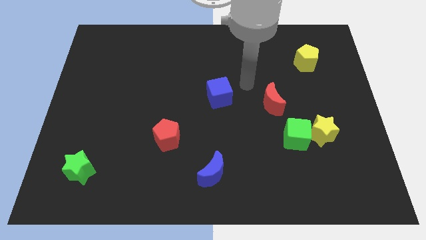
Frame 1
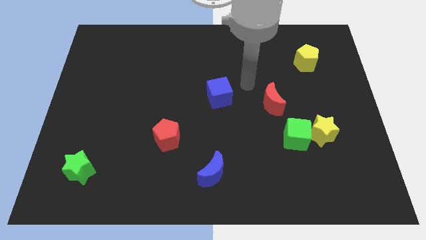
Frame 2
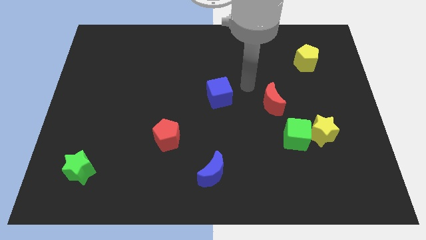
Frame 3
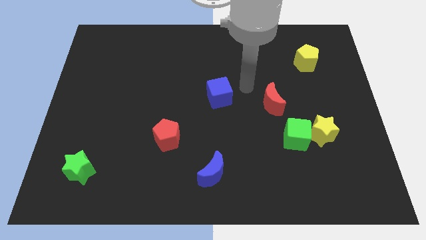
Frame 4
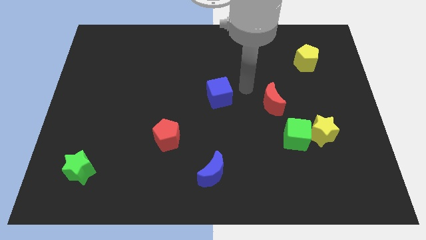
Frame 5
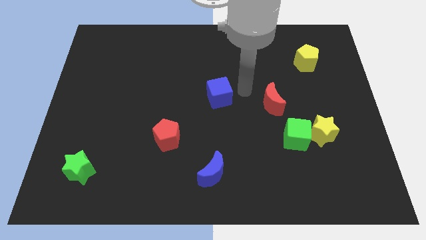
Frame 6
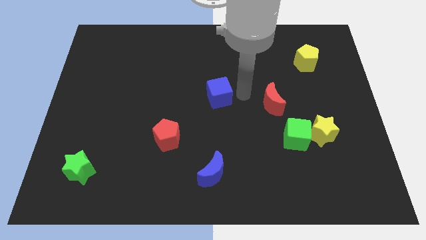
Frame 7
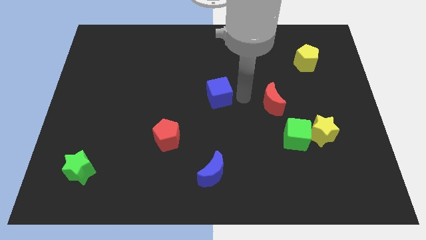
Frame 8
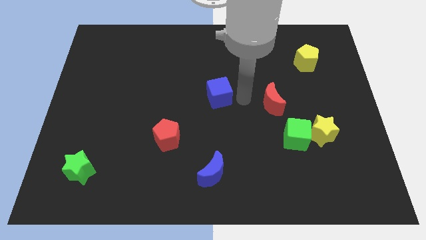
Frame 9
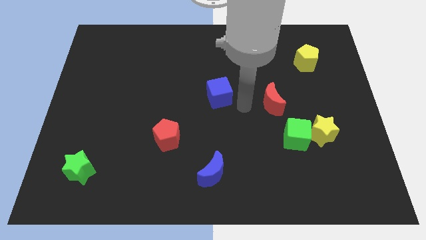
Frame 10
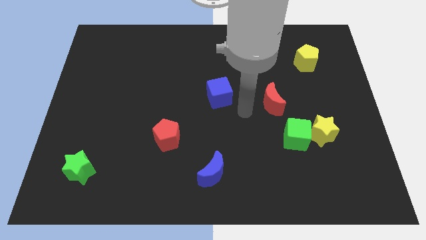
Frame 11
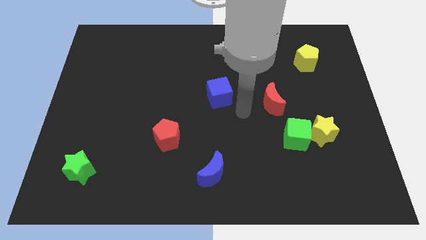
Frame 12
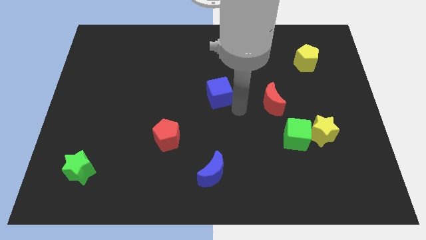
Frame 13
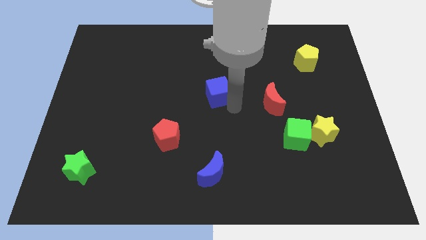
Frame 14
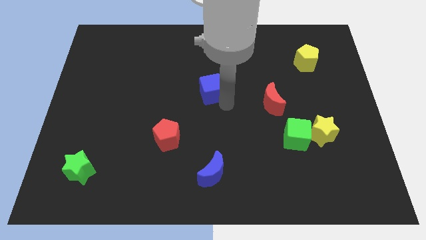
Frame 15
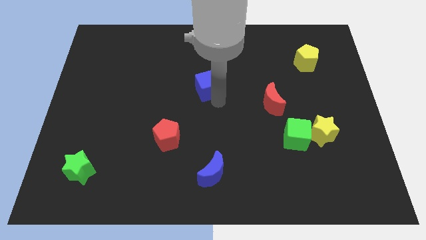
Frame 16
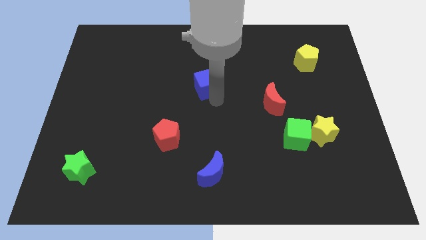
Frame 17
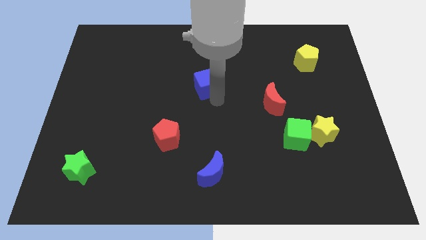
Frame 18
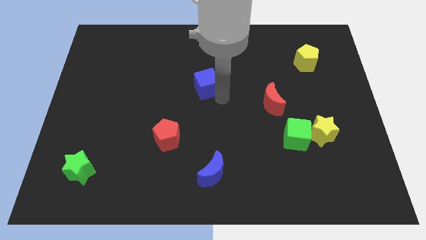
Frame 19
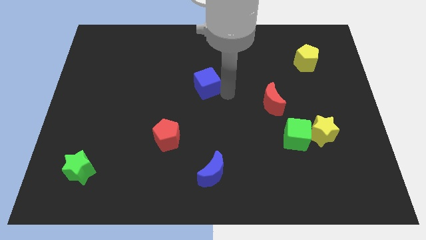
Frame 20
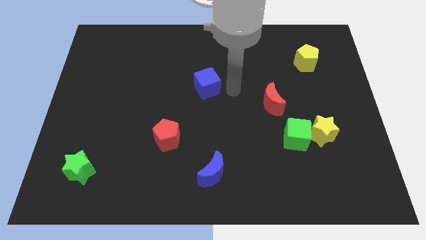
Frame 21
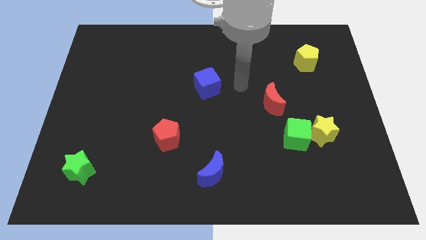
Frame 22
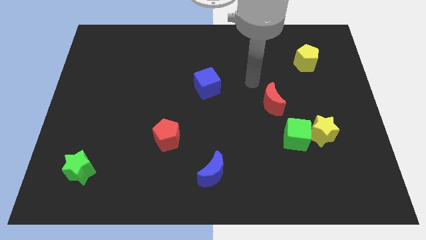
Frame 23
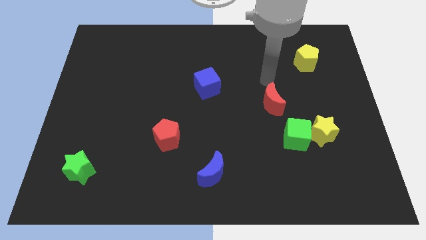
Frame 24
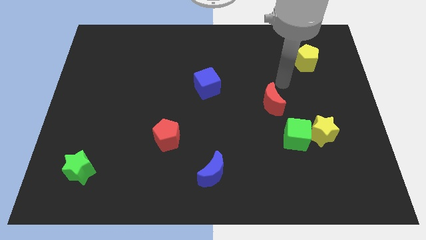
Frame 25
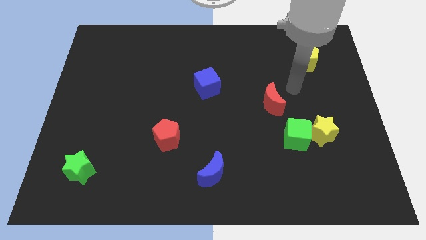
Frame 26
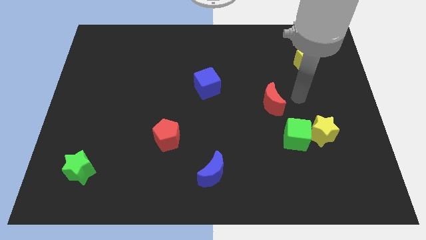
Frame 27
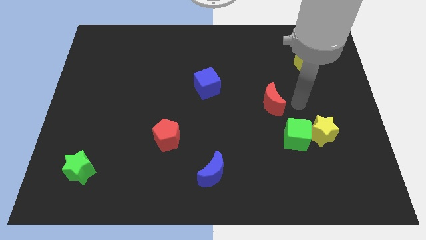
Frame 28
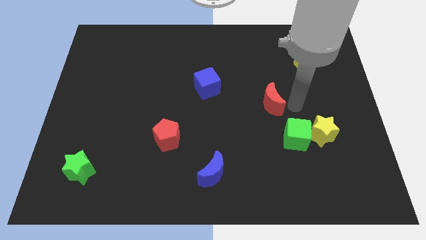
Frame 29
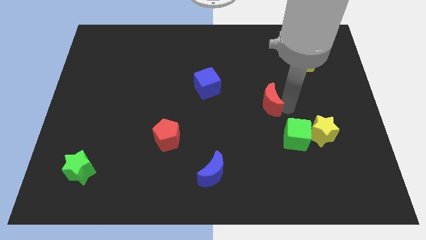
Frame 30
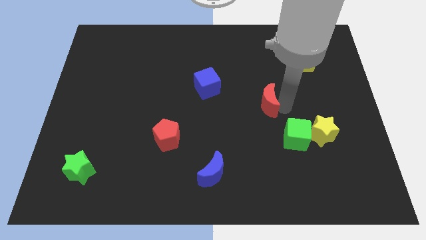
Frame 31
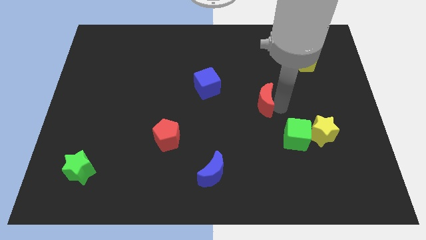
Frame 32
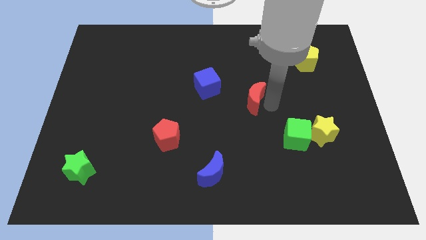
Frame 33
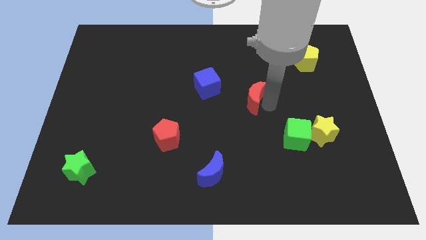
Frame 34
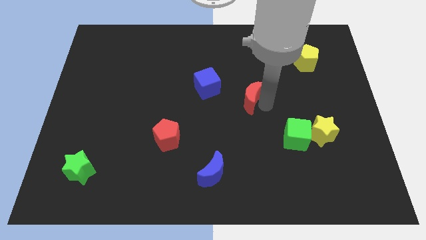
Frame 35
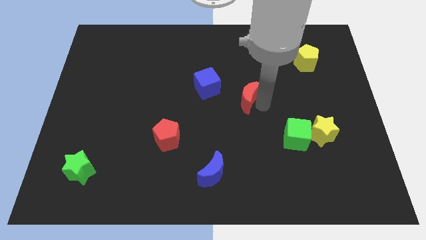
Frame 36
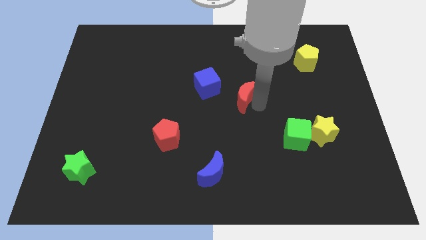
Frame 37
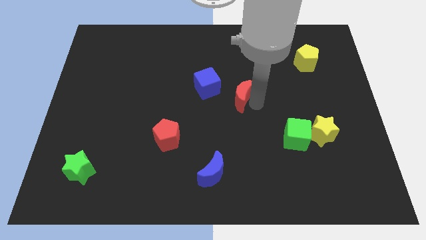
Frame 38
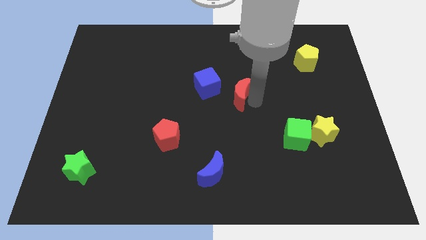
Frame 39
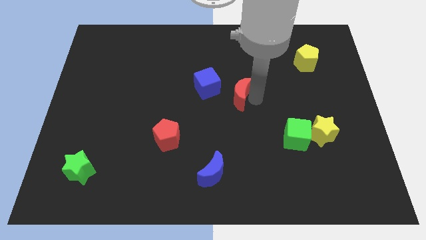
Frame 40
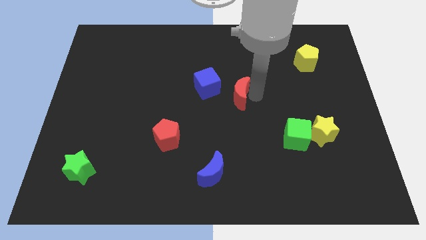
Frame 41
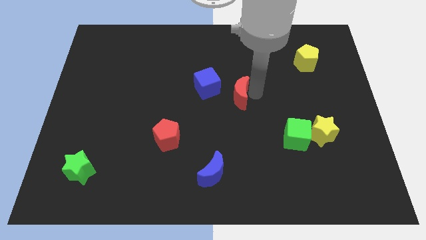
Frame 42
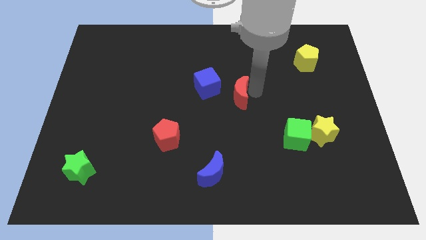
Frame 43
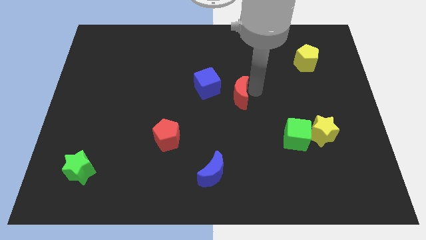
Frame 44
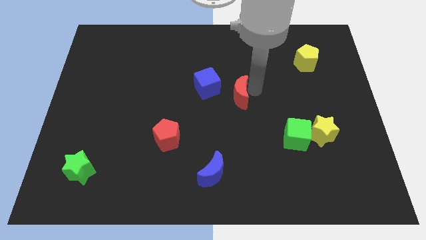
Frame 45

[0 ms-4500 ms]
move the red crescent towards the blue cube

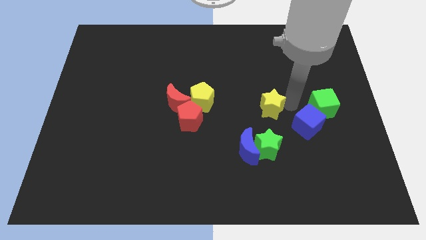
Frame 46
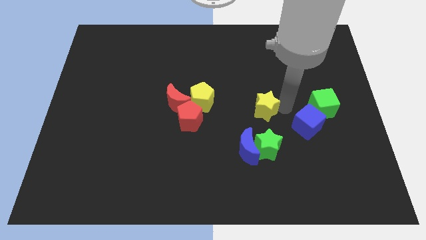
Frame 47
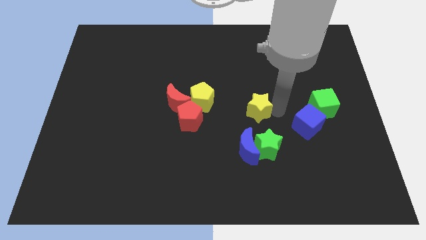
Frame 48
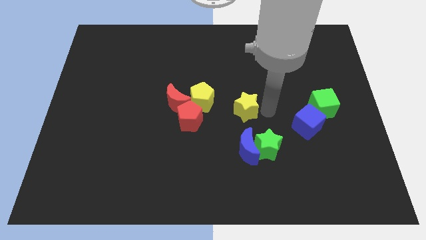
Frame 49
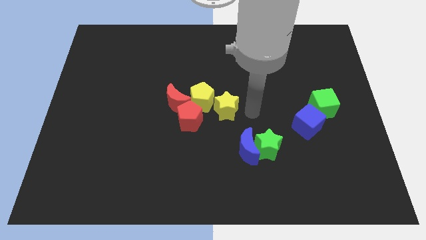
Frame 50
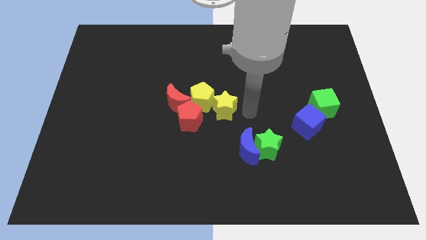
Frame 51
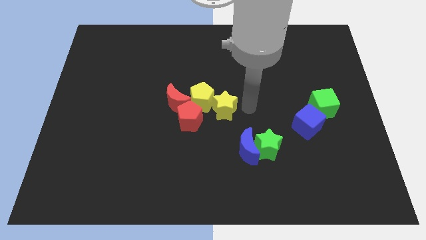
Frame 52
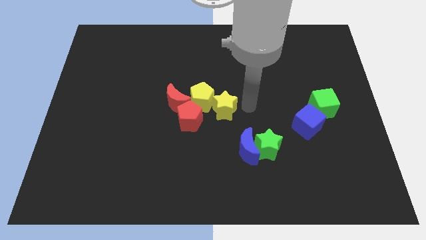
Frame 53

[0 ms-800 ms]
push the yellow star to the right of the yellow pentagon

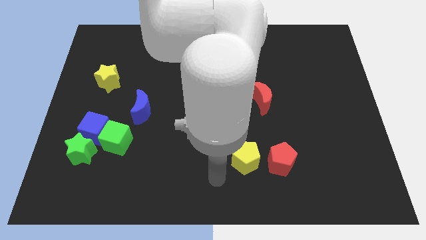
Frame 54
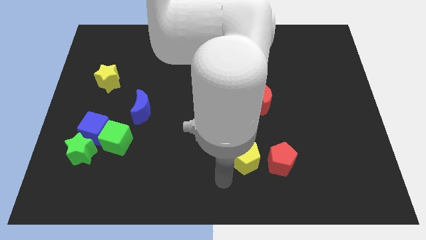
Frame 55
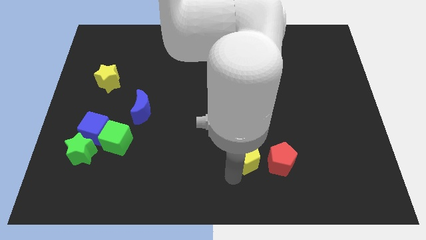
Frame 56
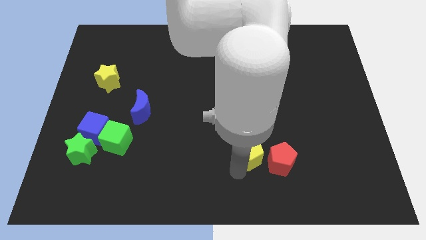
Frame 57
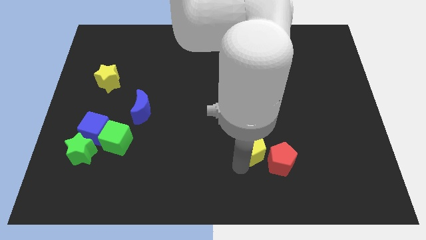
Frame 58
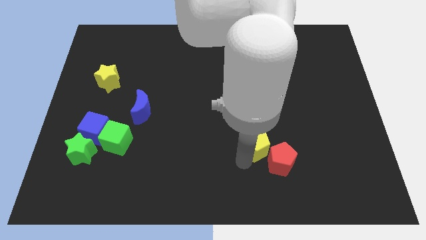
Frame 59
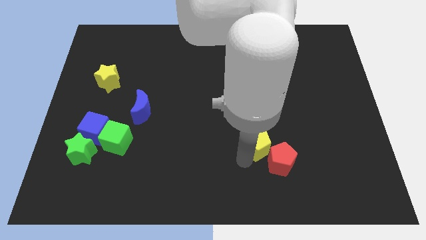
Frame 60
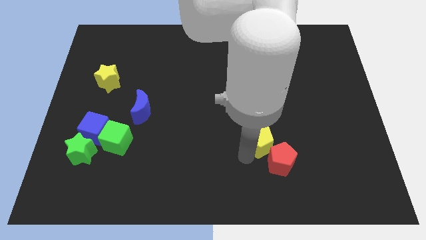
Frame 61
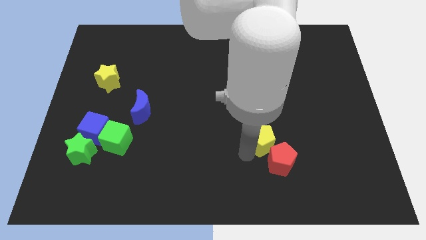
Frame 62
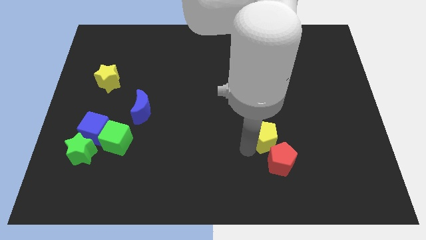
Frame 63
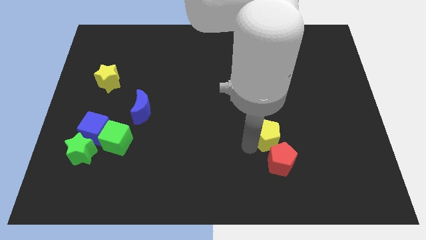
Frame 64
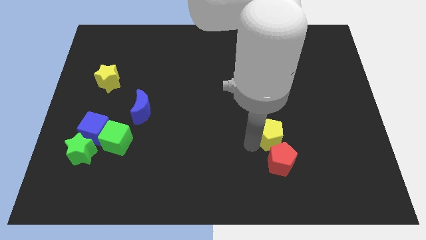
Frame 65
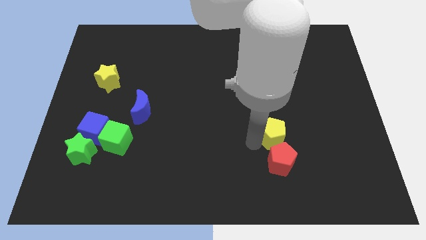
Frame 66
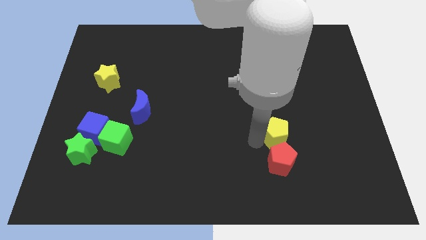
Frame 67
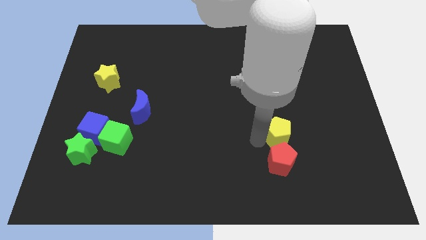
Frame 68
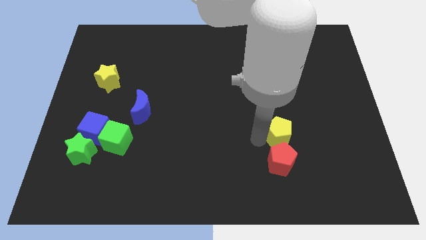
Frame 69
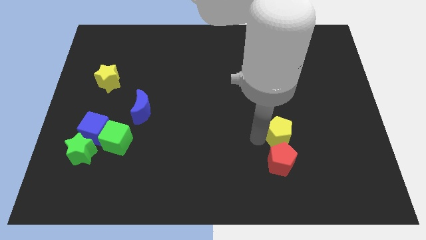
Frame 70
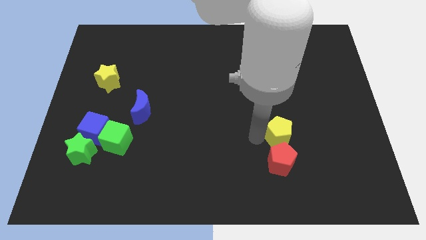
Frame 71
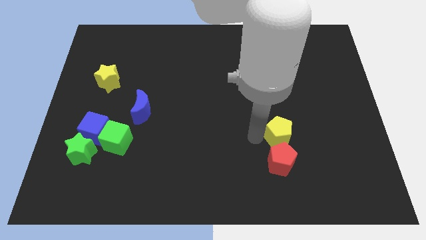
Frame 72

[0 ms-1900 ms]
place the yellow pentagon above the red pentagon

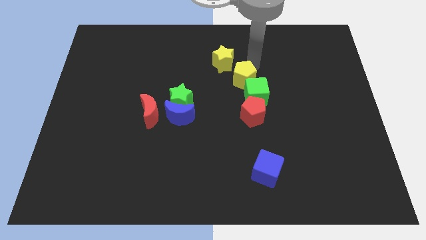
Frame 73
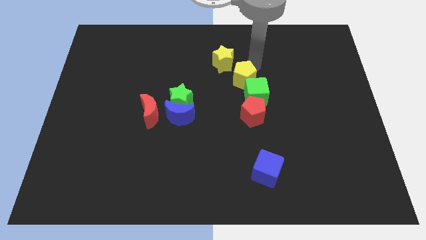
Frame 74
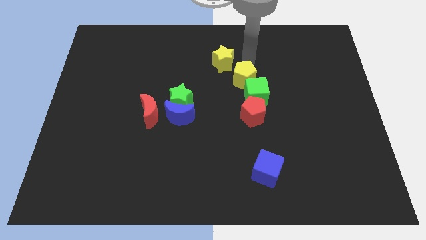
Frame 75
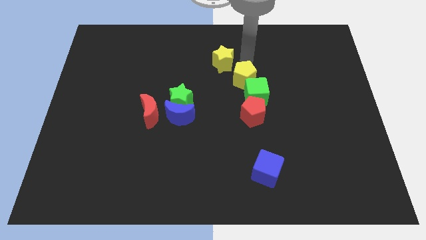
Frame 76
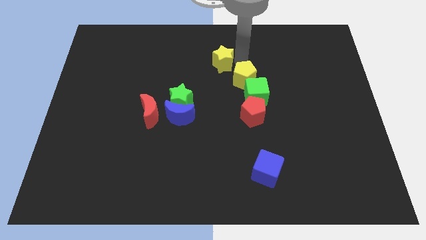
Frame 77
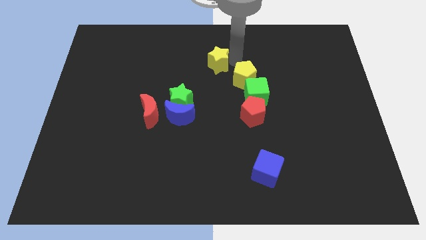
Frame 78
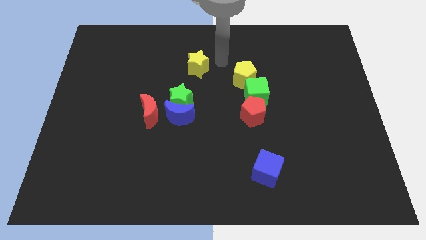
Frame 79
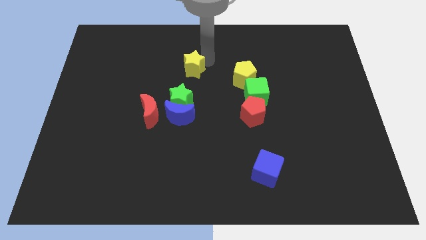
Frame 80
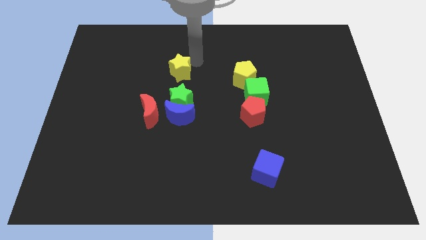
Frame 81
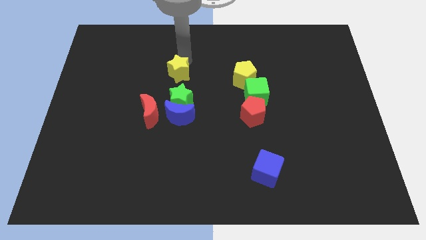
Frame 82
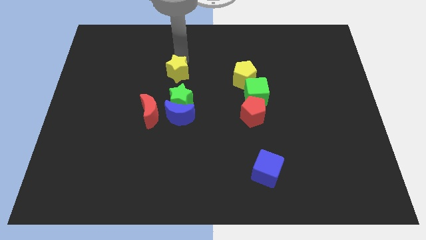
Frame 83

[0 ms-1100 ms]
place the yellow star at the top of green star

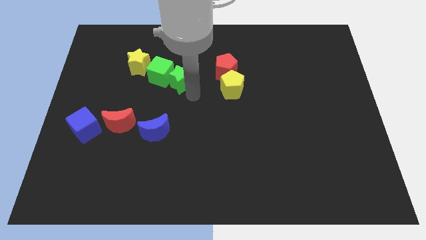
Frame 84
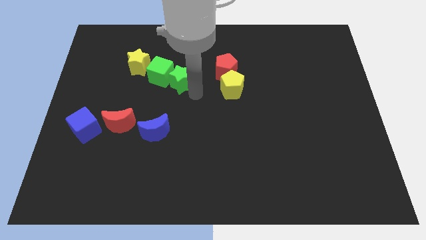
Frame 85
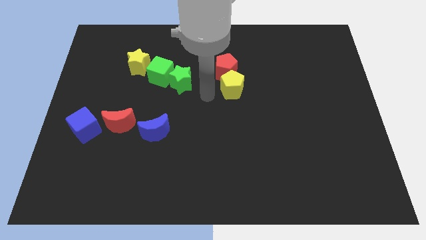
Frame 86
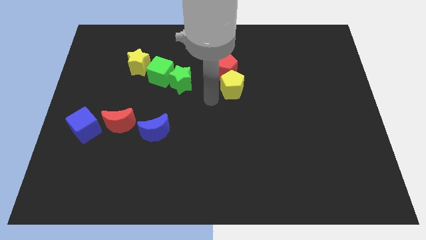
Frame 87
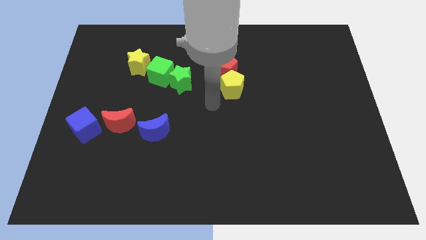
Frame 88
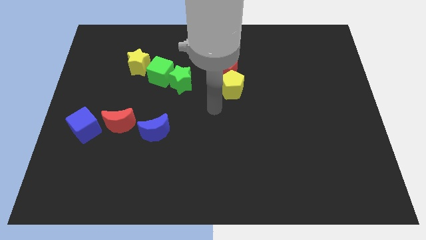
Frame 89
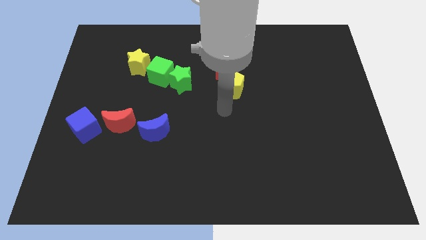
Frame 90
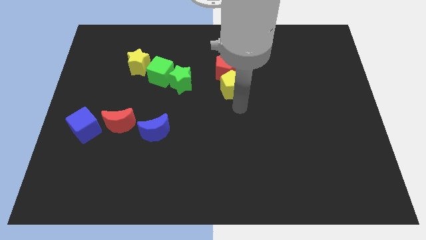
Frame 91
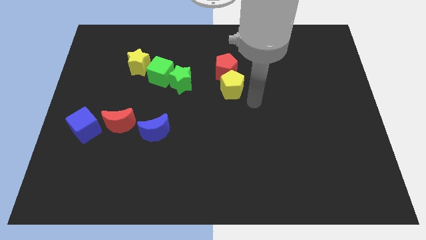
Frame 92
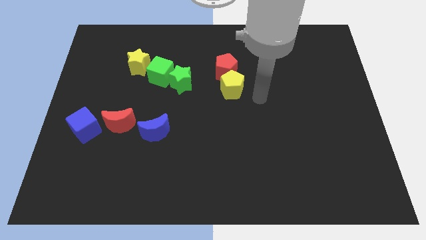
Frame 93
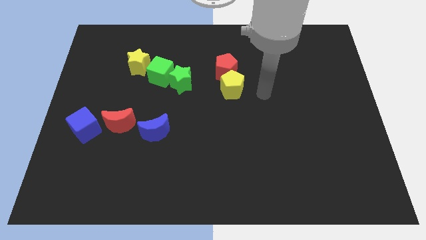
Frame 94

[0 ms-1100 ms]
point your arm to the right side of yellow pentagon
